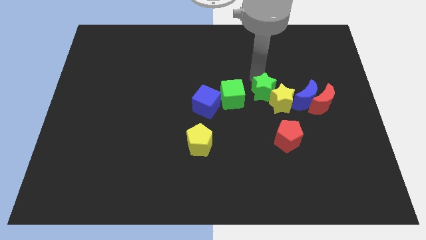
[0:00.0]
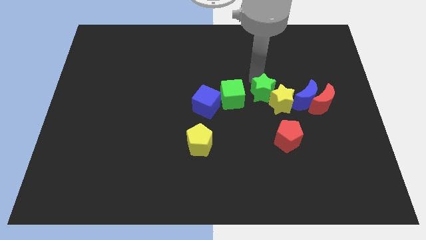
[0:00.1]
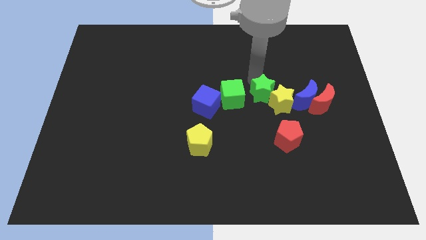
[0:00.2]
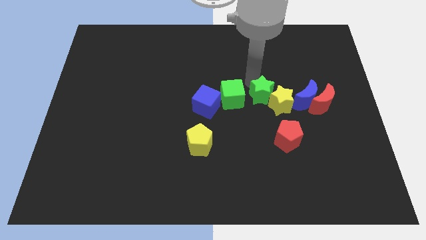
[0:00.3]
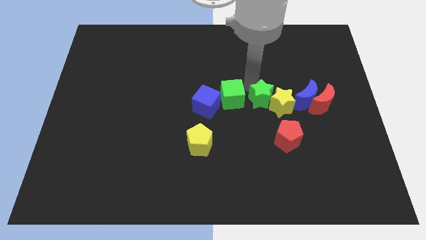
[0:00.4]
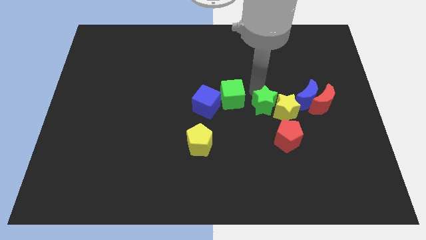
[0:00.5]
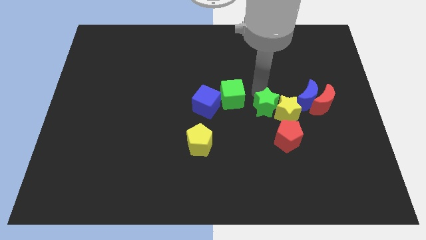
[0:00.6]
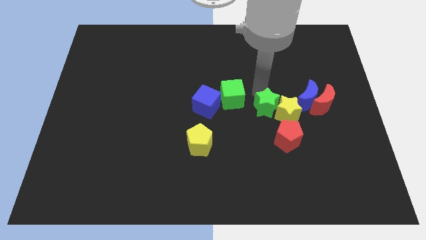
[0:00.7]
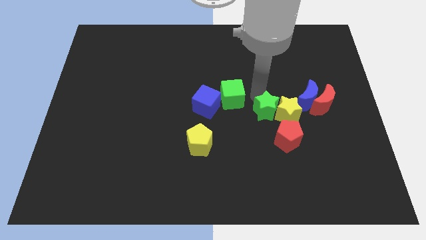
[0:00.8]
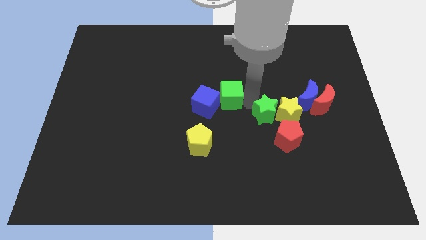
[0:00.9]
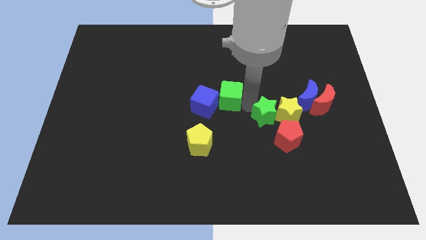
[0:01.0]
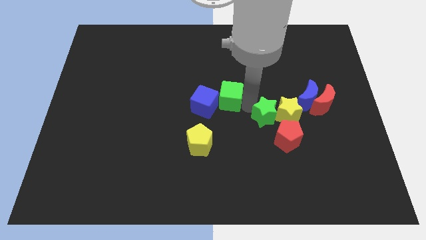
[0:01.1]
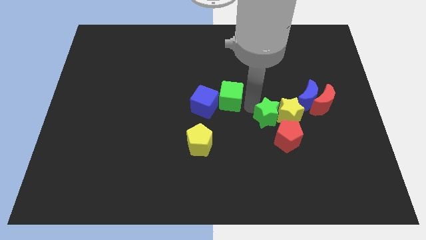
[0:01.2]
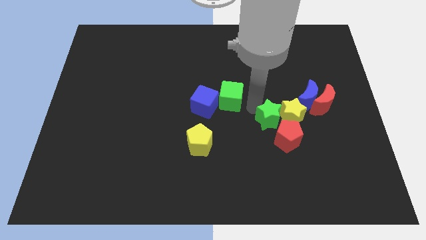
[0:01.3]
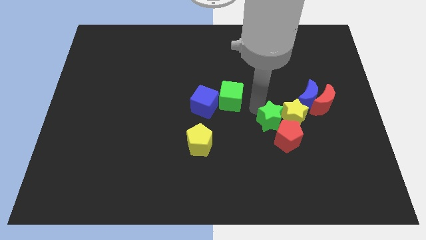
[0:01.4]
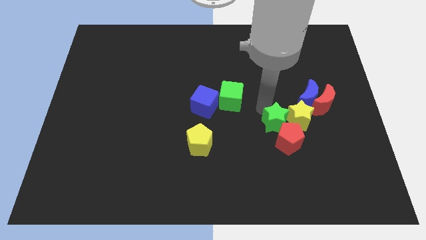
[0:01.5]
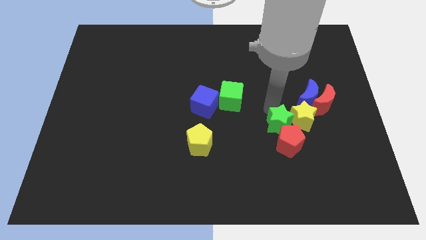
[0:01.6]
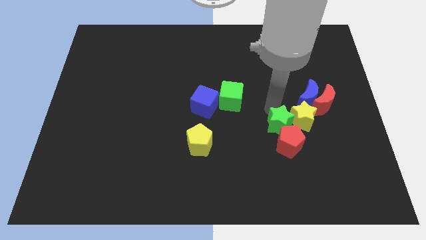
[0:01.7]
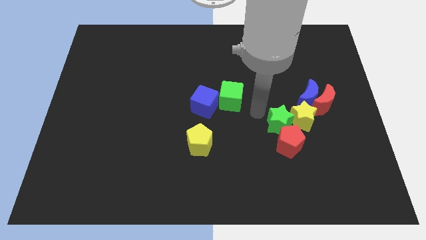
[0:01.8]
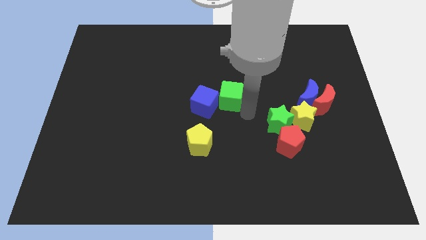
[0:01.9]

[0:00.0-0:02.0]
place the arm in between the green blocks

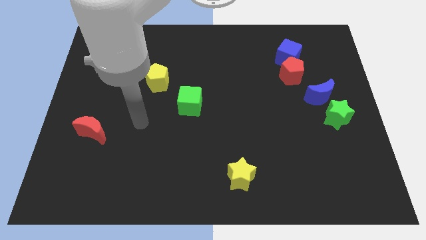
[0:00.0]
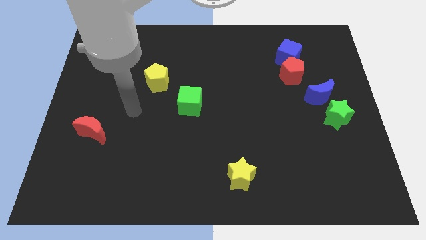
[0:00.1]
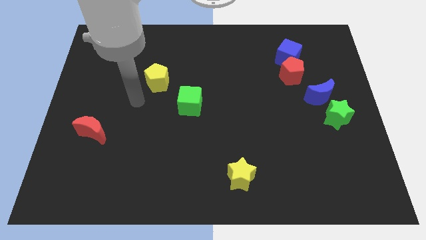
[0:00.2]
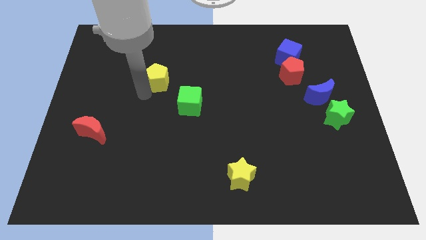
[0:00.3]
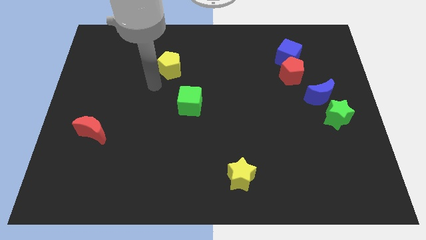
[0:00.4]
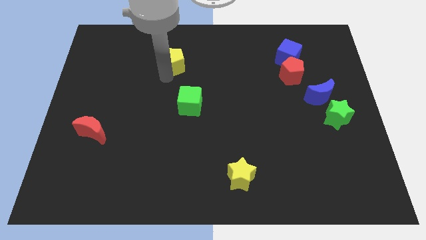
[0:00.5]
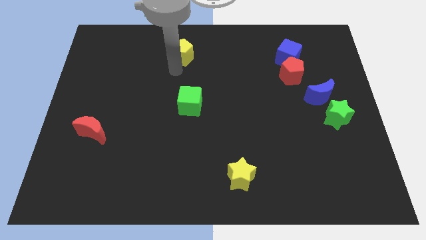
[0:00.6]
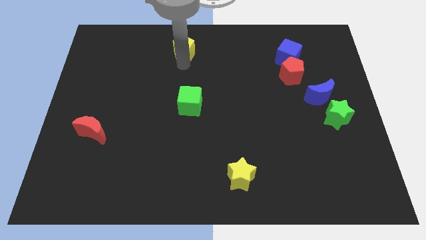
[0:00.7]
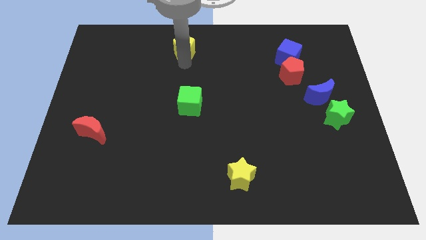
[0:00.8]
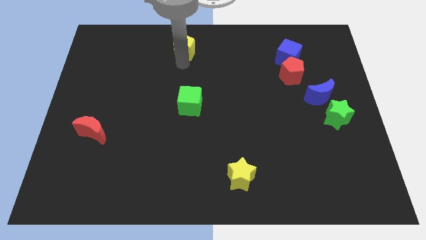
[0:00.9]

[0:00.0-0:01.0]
push the yellow pentagon upward

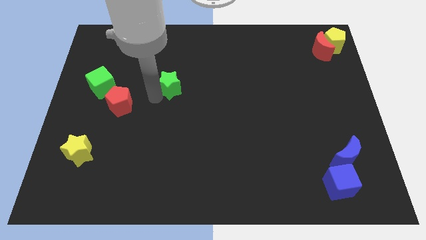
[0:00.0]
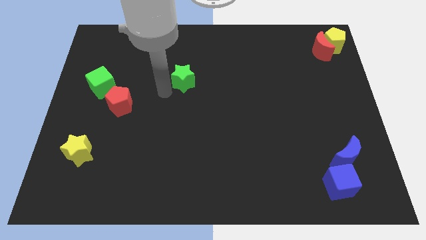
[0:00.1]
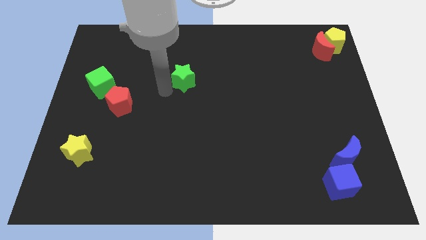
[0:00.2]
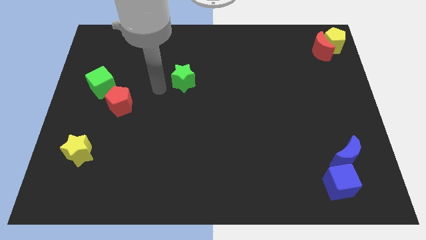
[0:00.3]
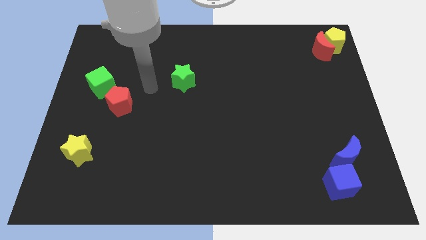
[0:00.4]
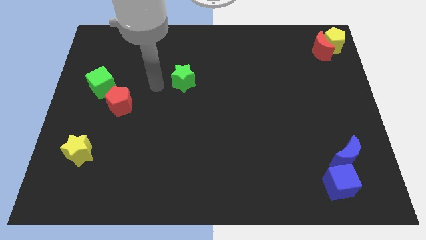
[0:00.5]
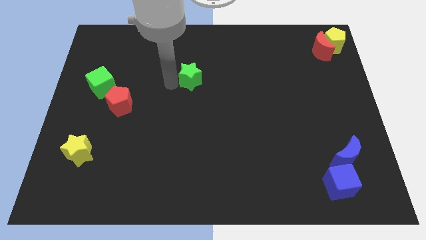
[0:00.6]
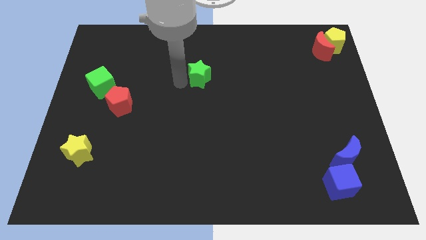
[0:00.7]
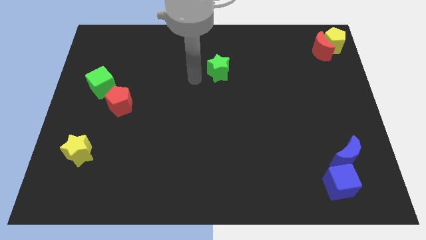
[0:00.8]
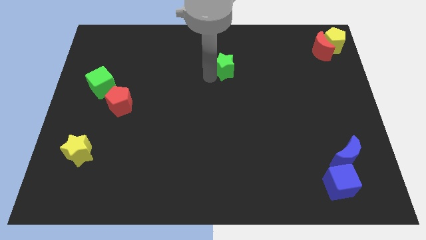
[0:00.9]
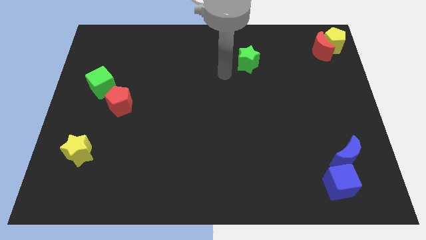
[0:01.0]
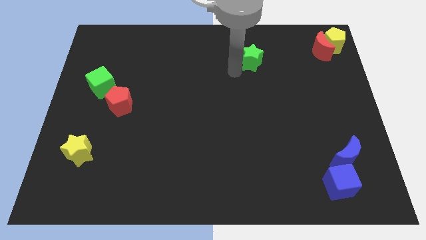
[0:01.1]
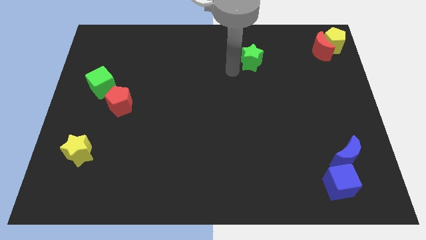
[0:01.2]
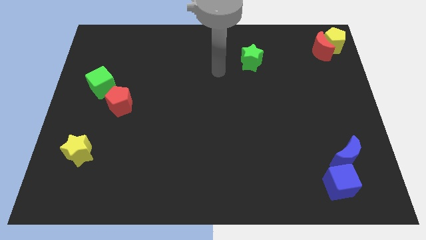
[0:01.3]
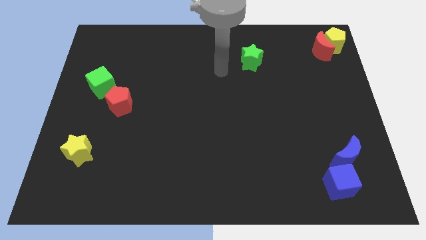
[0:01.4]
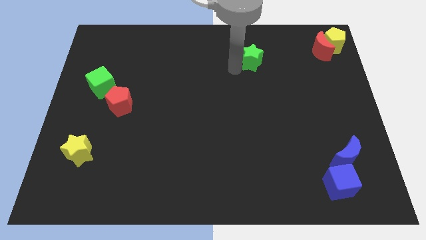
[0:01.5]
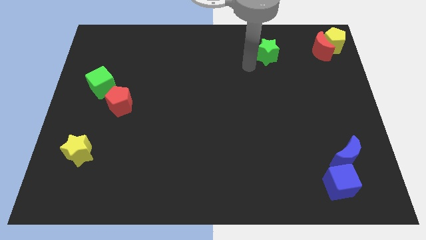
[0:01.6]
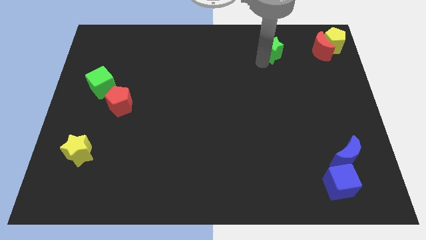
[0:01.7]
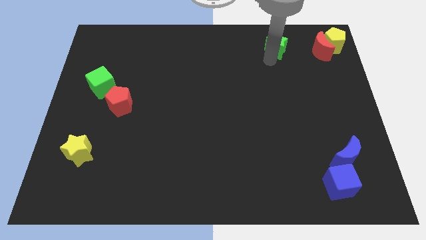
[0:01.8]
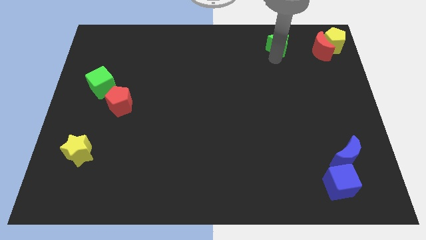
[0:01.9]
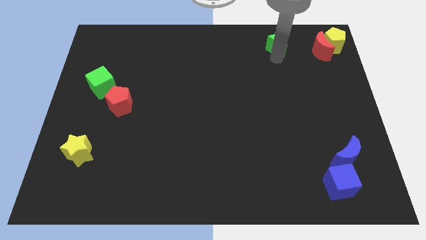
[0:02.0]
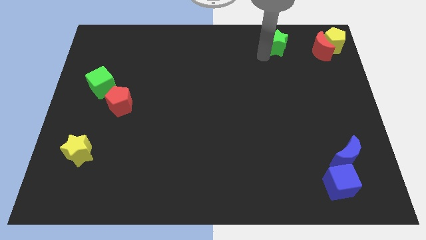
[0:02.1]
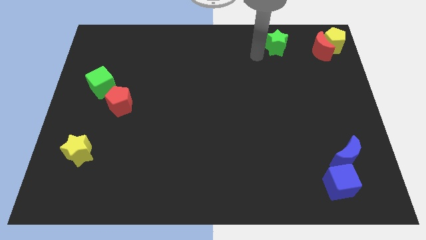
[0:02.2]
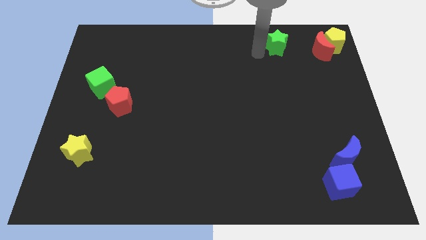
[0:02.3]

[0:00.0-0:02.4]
move the green star towards red crescent

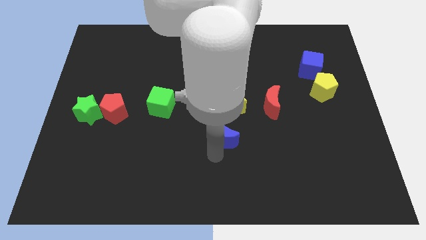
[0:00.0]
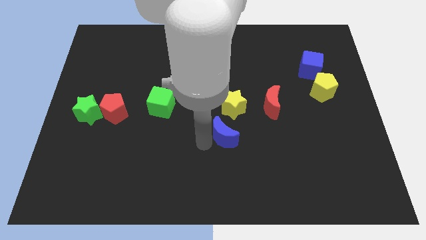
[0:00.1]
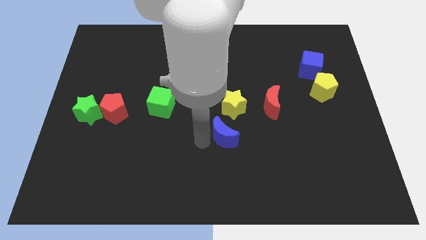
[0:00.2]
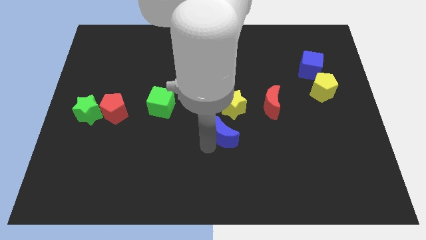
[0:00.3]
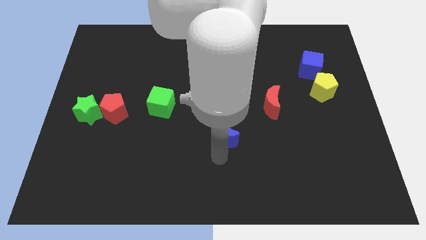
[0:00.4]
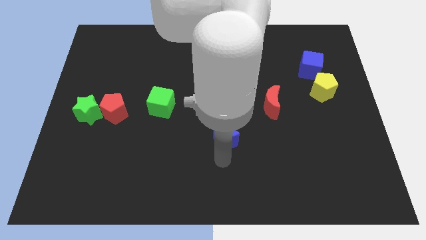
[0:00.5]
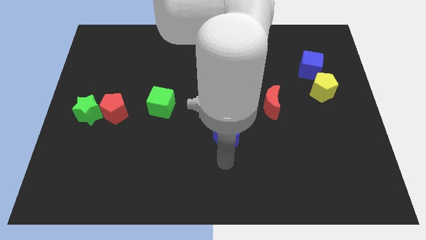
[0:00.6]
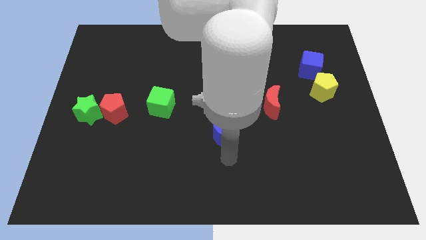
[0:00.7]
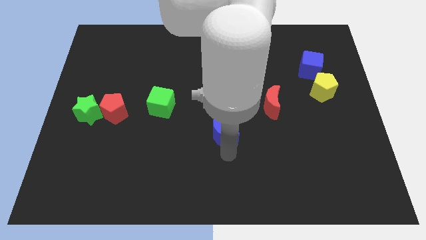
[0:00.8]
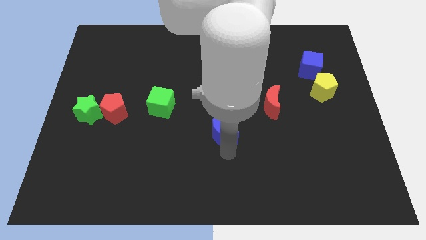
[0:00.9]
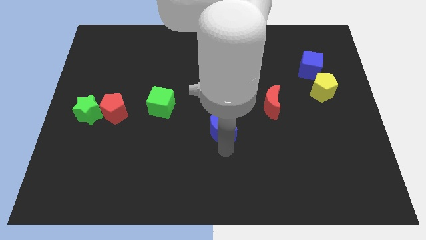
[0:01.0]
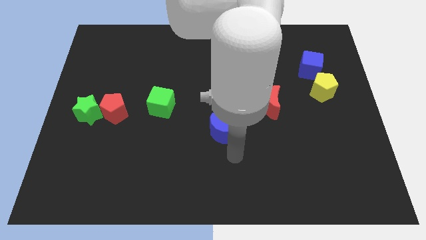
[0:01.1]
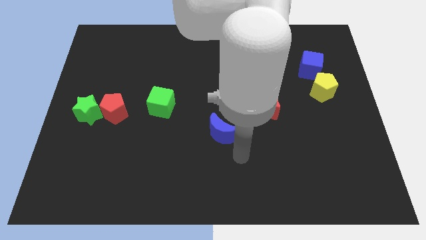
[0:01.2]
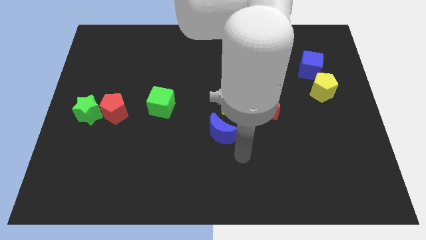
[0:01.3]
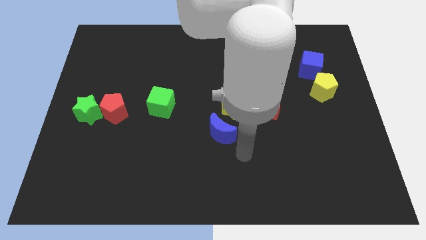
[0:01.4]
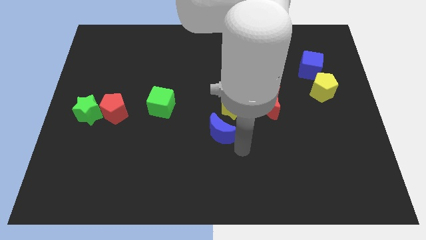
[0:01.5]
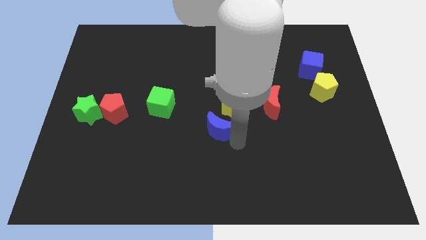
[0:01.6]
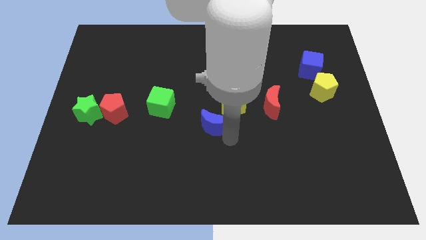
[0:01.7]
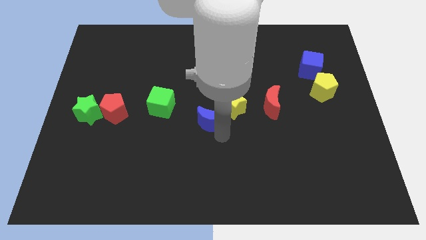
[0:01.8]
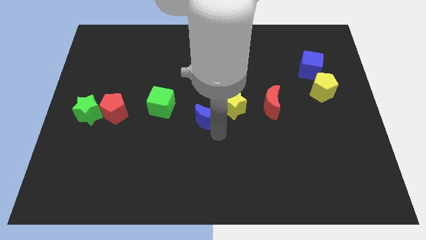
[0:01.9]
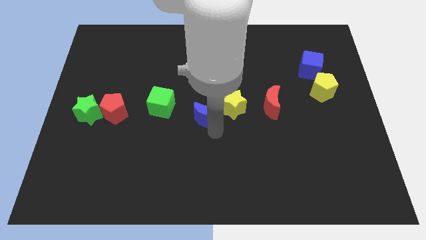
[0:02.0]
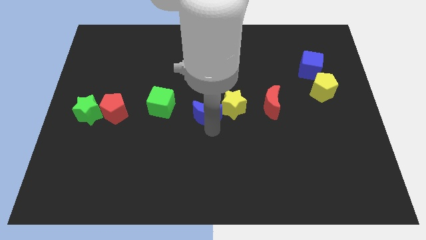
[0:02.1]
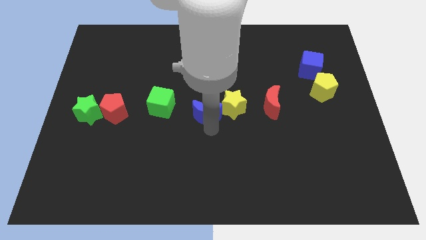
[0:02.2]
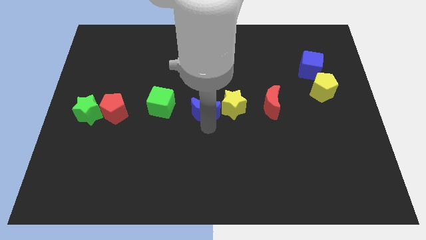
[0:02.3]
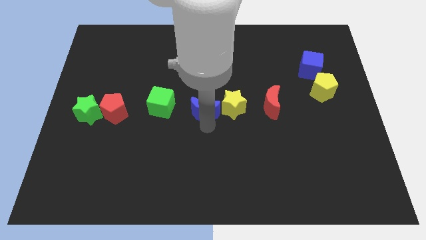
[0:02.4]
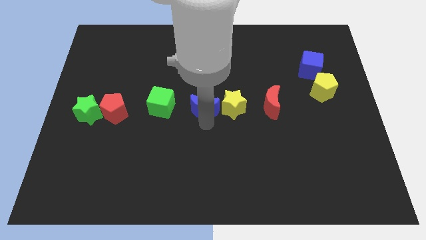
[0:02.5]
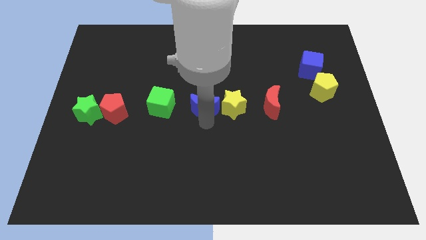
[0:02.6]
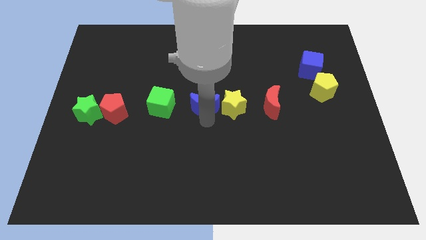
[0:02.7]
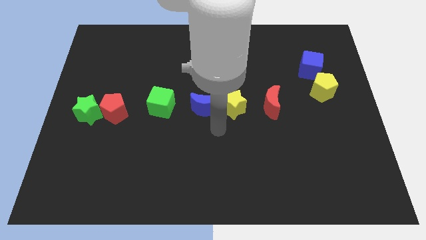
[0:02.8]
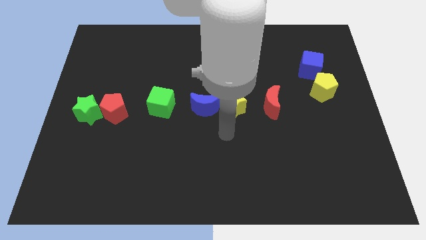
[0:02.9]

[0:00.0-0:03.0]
place the blue moon in between of green cube yellow star

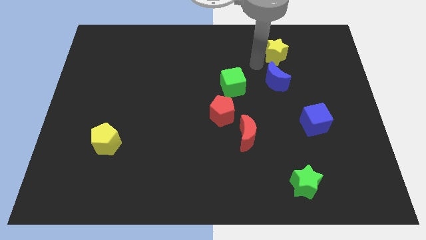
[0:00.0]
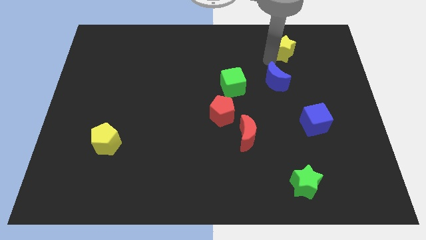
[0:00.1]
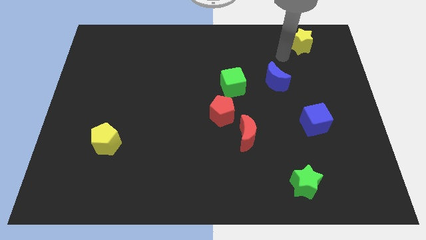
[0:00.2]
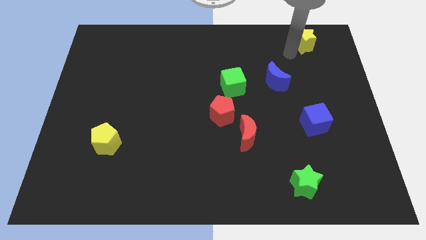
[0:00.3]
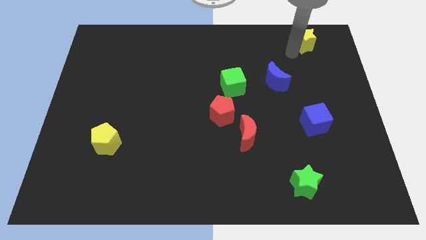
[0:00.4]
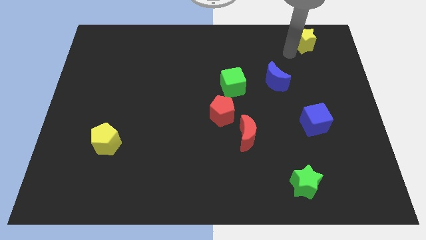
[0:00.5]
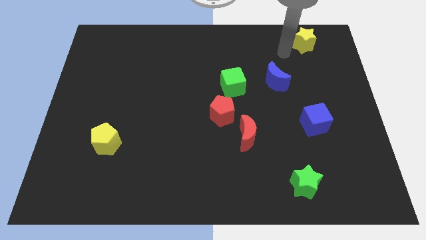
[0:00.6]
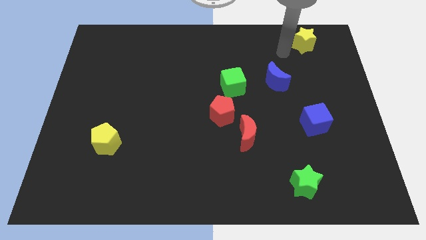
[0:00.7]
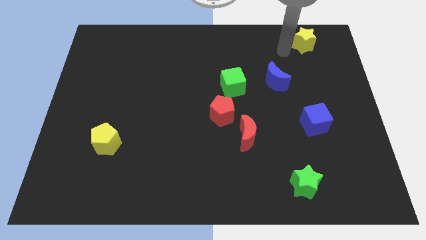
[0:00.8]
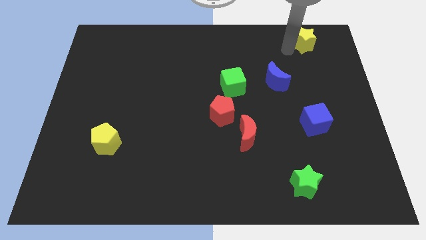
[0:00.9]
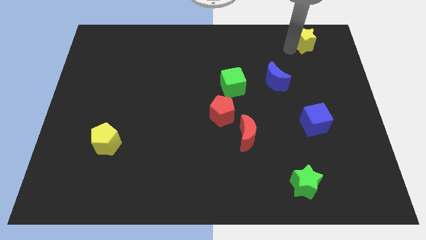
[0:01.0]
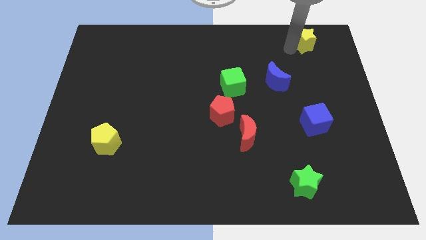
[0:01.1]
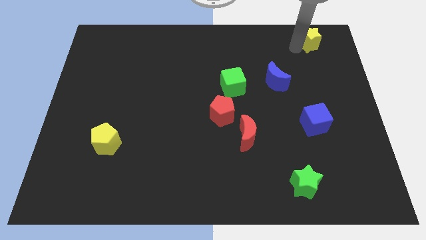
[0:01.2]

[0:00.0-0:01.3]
slide yellow star diagonal to the top of the blue cube
